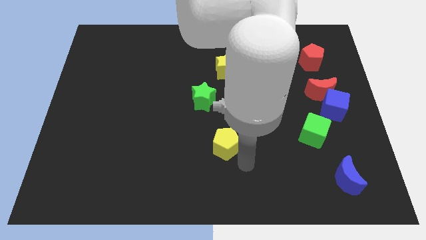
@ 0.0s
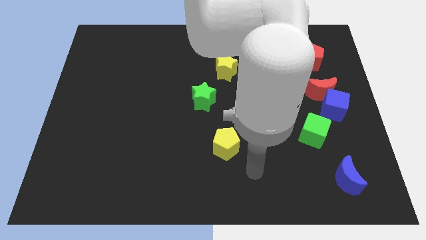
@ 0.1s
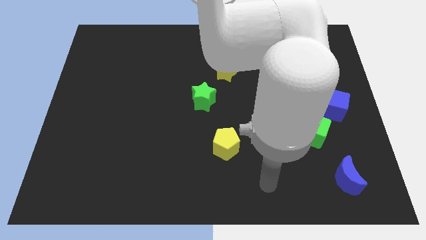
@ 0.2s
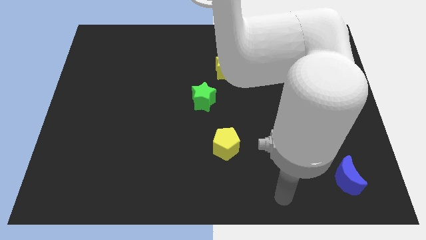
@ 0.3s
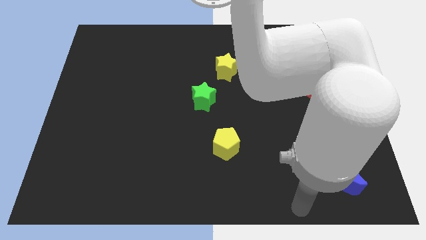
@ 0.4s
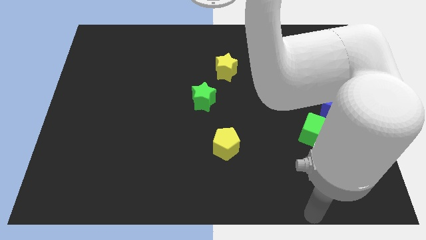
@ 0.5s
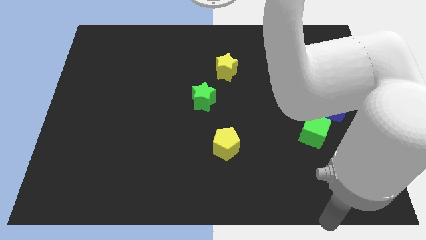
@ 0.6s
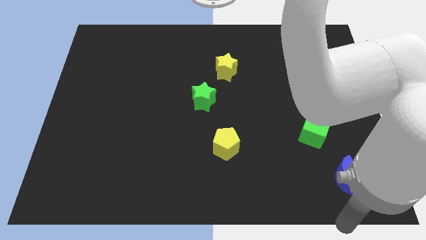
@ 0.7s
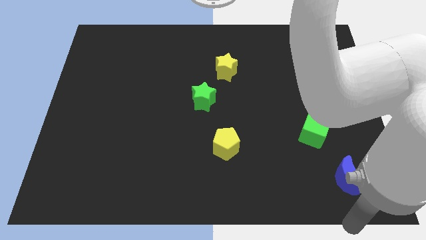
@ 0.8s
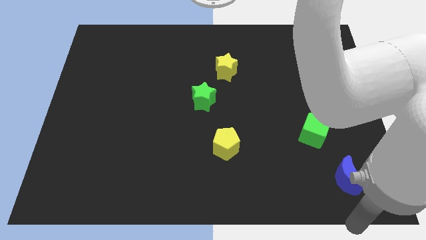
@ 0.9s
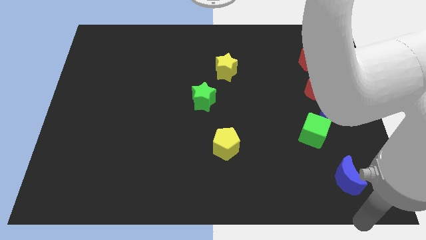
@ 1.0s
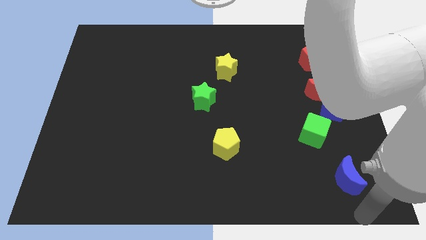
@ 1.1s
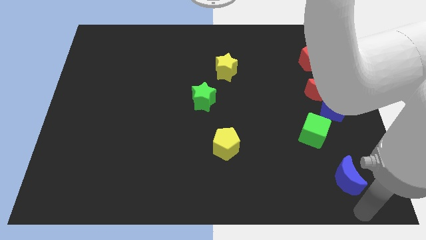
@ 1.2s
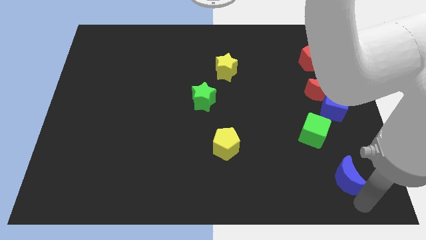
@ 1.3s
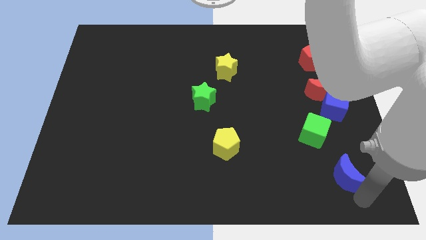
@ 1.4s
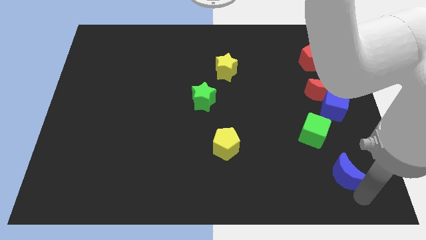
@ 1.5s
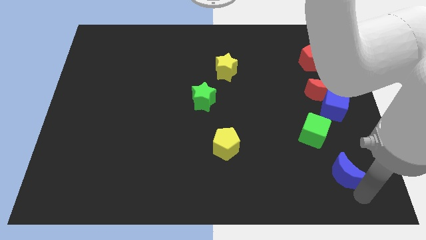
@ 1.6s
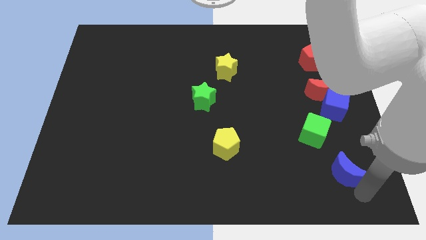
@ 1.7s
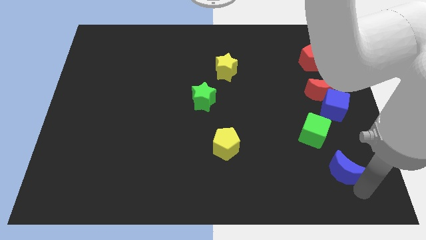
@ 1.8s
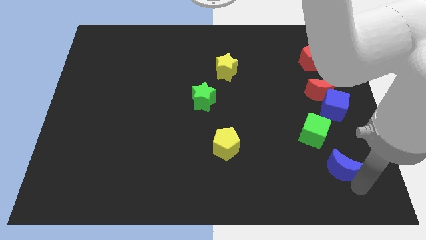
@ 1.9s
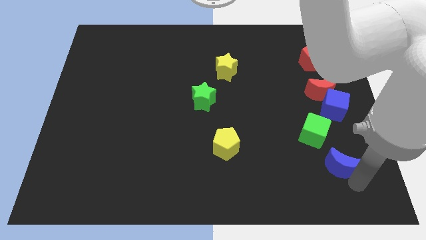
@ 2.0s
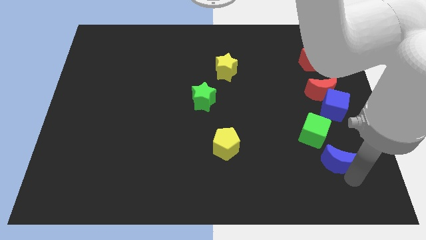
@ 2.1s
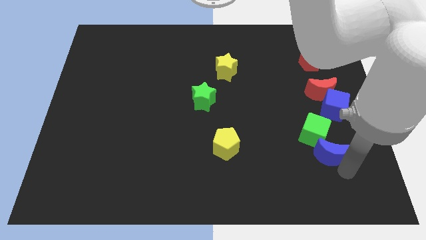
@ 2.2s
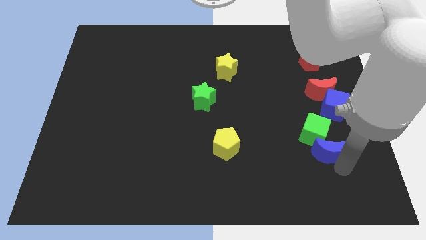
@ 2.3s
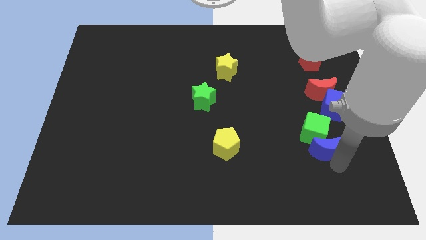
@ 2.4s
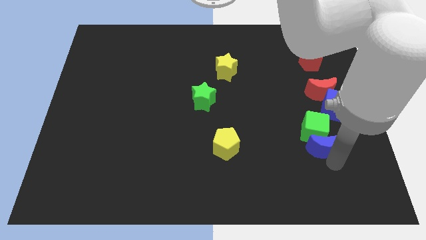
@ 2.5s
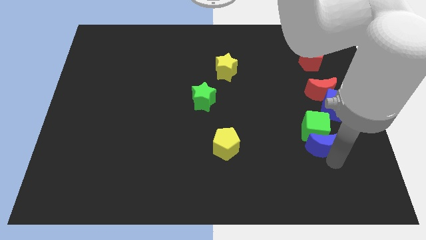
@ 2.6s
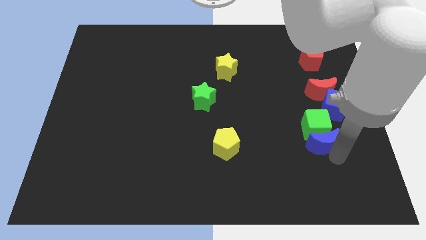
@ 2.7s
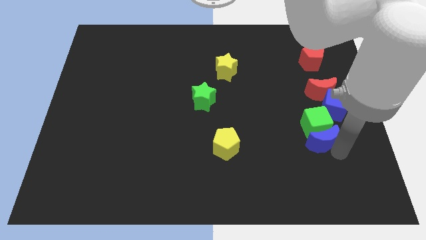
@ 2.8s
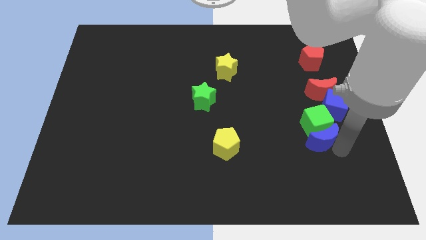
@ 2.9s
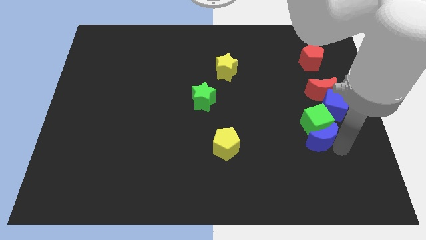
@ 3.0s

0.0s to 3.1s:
push the blue moon into the green cube

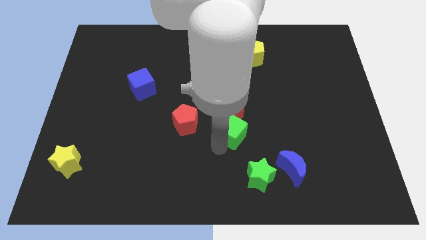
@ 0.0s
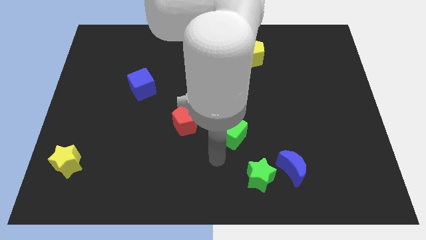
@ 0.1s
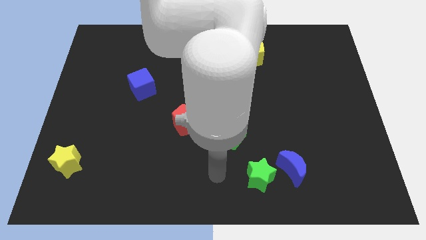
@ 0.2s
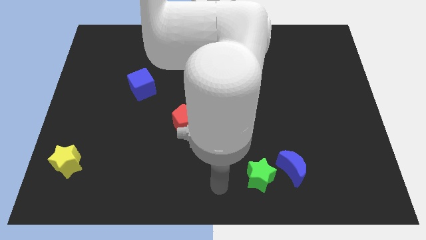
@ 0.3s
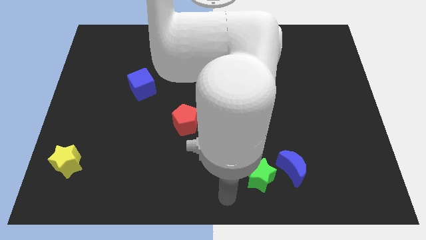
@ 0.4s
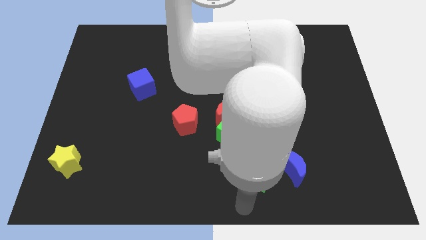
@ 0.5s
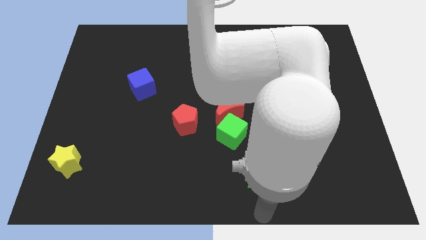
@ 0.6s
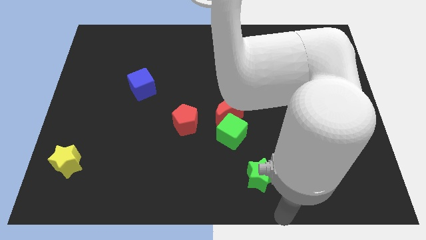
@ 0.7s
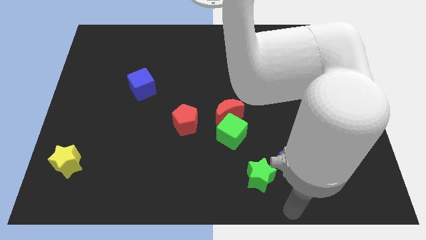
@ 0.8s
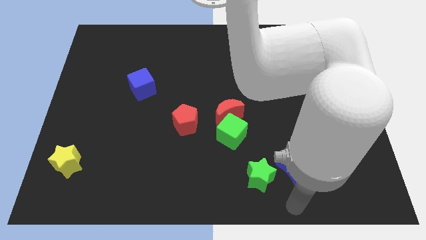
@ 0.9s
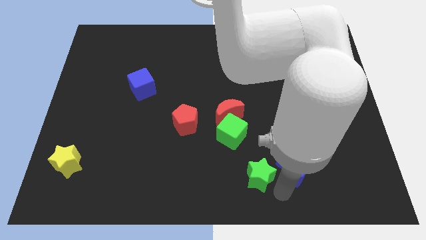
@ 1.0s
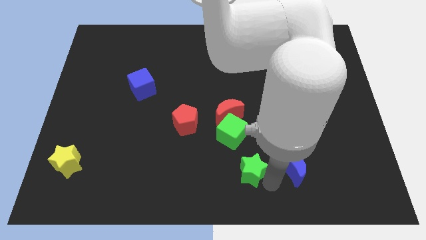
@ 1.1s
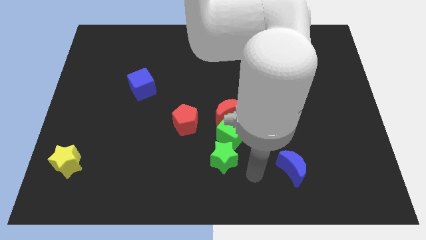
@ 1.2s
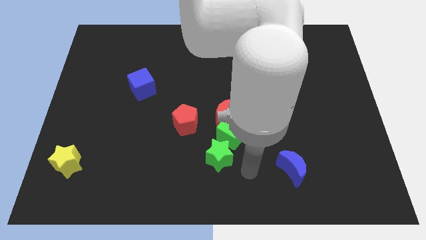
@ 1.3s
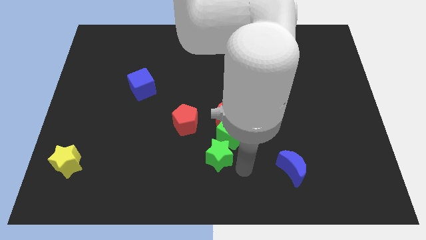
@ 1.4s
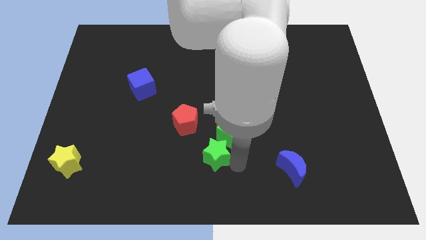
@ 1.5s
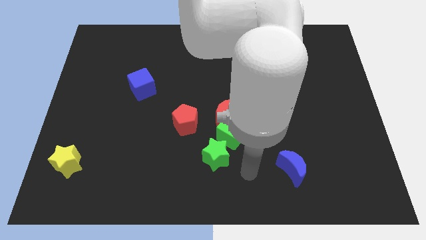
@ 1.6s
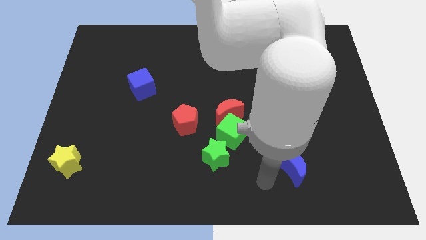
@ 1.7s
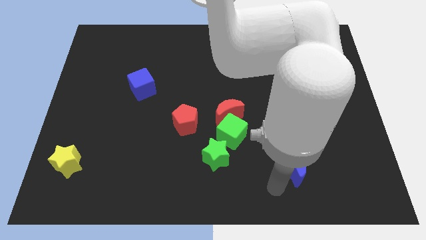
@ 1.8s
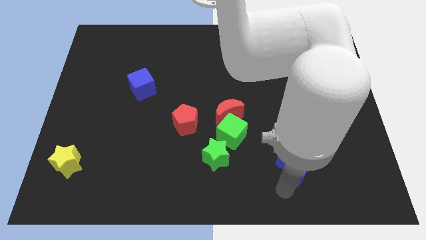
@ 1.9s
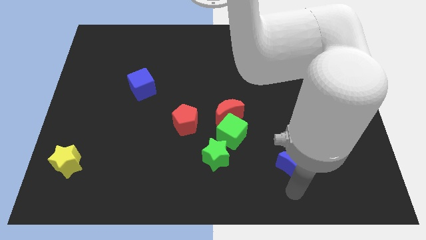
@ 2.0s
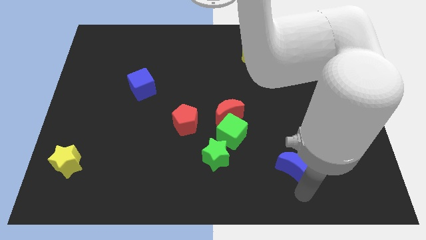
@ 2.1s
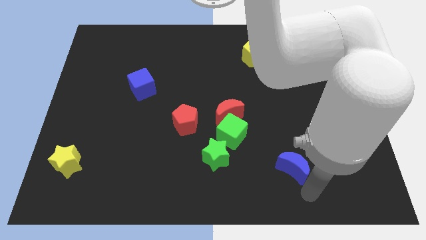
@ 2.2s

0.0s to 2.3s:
move the green star to the bottom left of the green cube

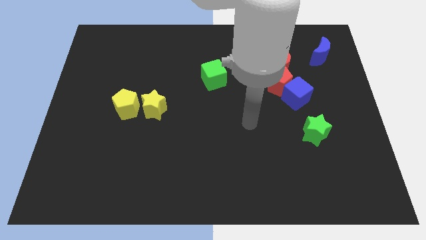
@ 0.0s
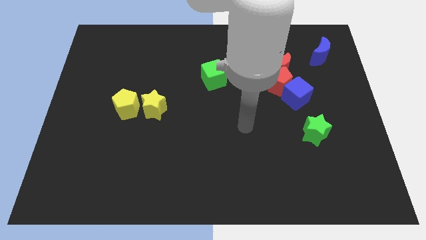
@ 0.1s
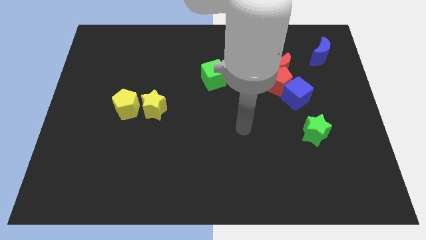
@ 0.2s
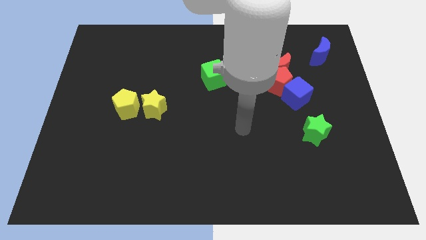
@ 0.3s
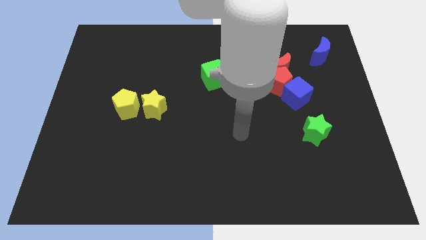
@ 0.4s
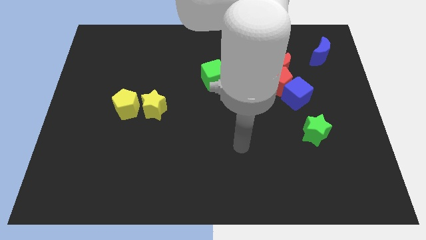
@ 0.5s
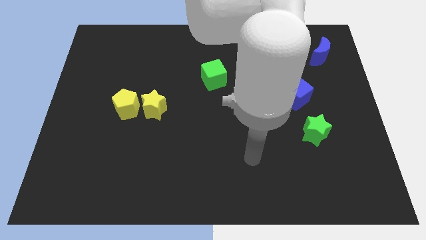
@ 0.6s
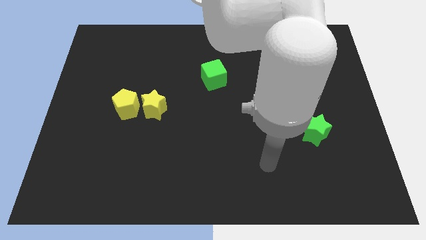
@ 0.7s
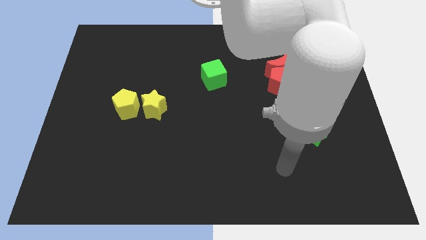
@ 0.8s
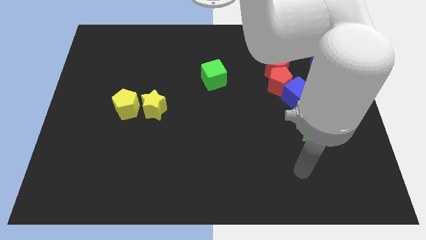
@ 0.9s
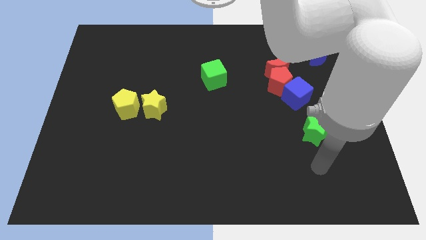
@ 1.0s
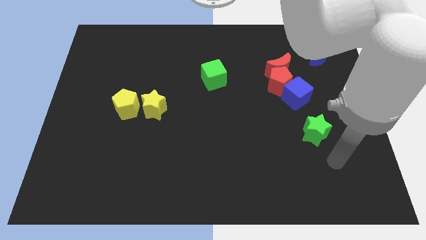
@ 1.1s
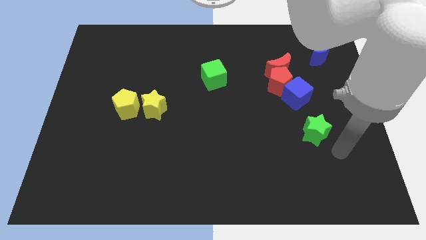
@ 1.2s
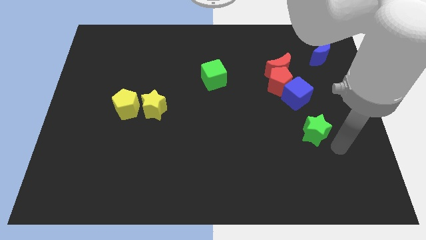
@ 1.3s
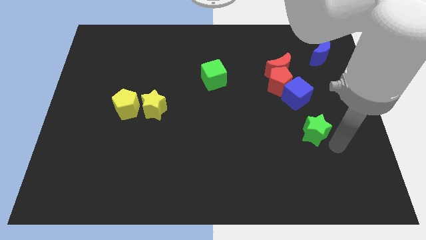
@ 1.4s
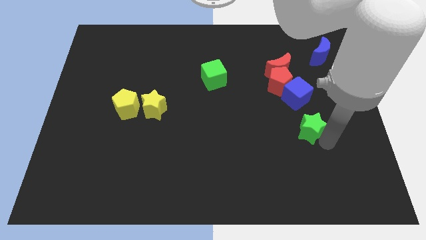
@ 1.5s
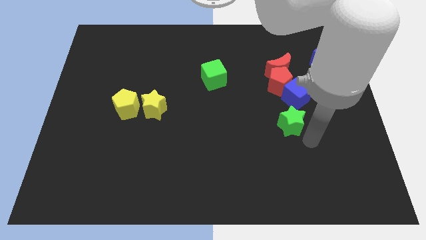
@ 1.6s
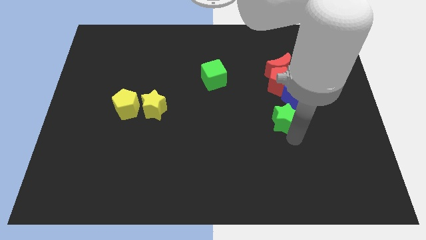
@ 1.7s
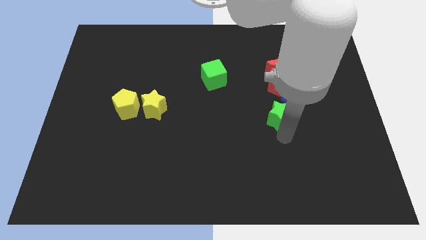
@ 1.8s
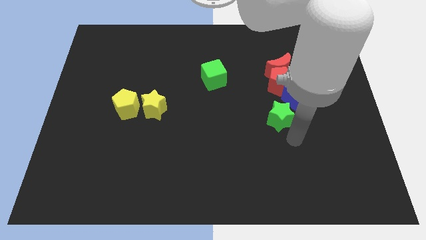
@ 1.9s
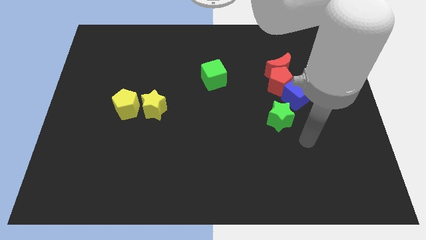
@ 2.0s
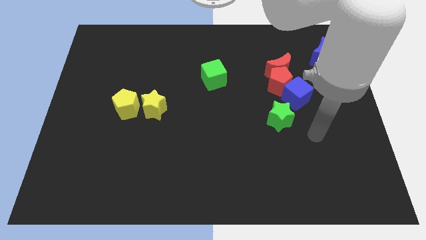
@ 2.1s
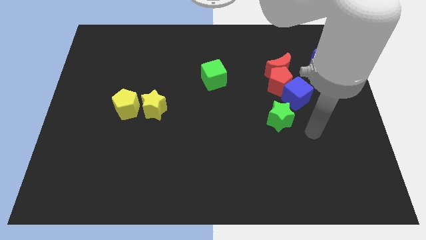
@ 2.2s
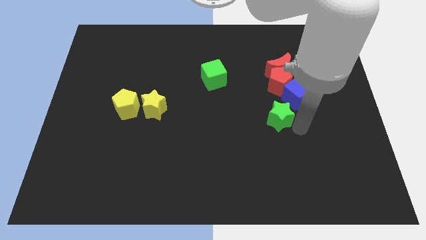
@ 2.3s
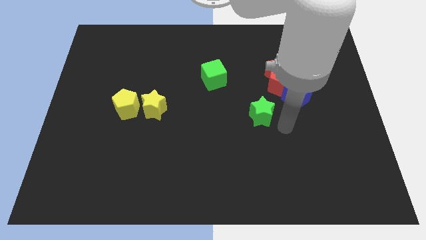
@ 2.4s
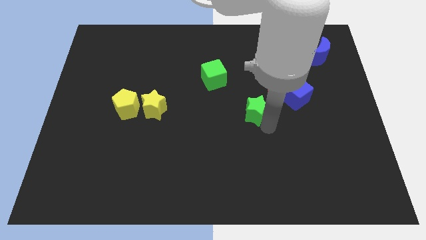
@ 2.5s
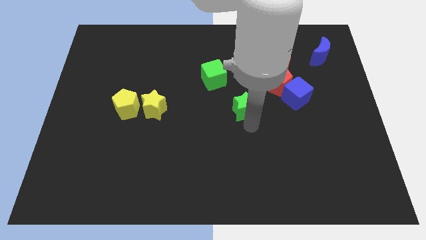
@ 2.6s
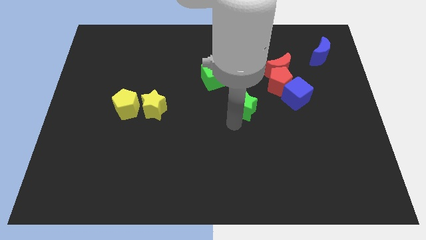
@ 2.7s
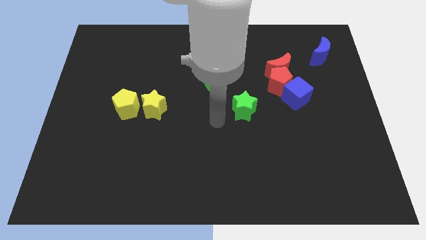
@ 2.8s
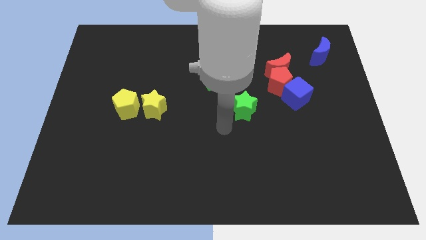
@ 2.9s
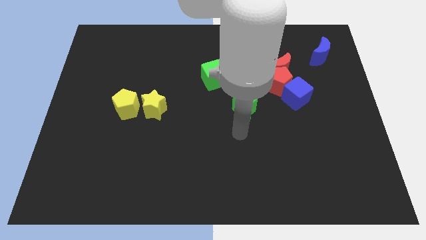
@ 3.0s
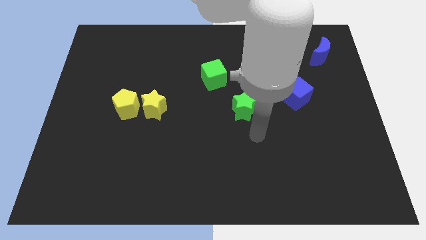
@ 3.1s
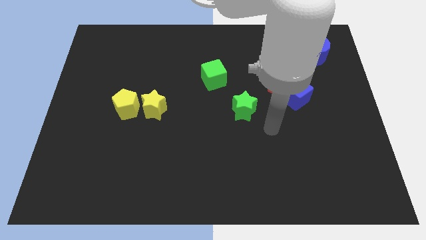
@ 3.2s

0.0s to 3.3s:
slide the green star to the bottom right side of the green cube
